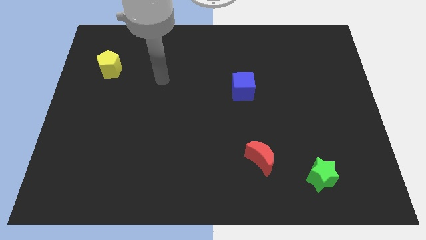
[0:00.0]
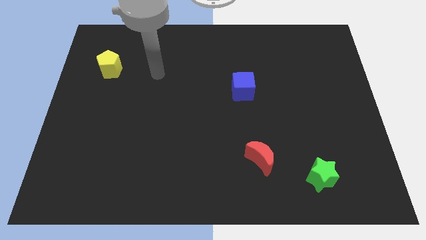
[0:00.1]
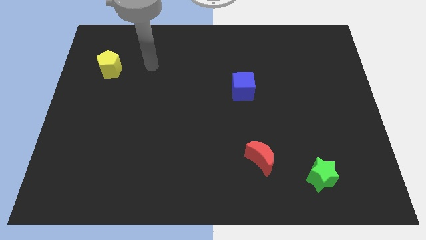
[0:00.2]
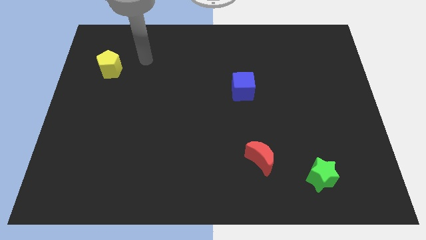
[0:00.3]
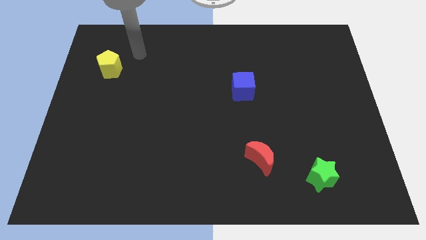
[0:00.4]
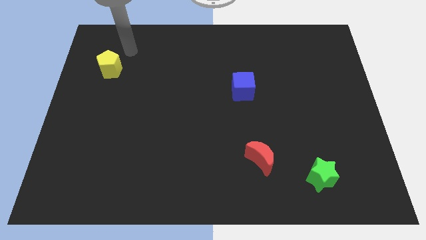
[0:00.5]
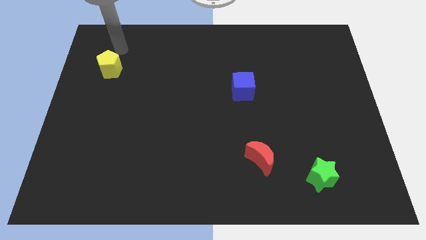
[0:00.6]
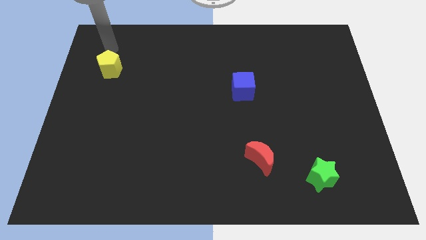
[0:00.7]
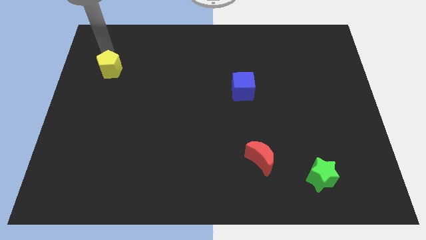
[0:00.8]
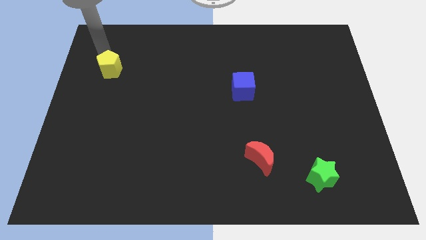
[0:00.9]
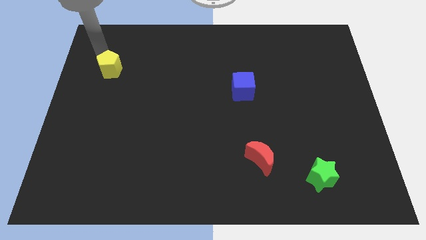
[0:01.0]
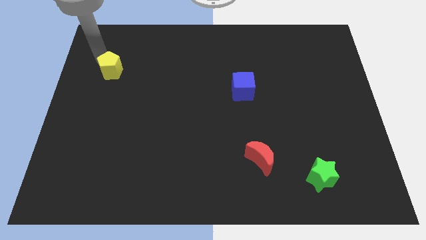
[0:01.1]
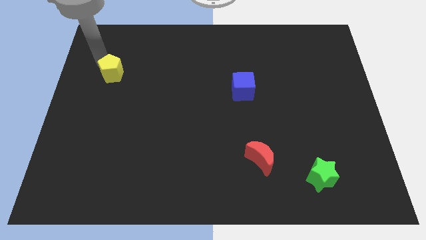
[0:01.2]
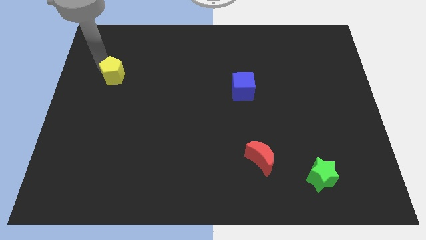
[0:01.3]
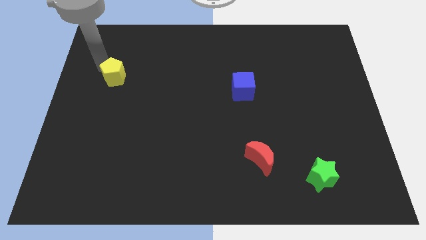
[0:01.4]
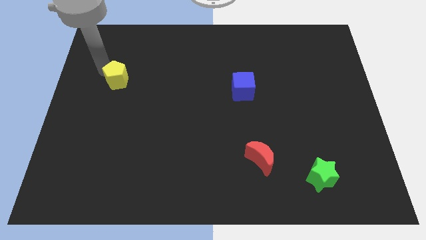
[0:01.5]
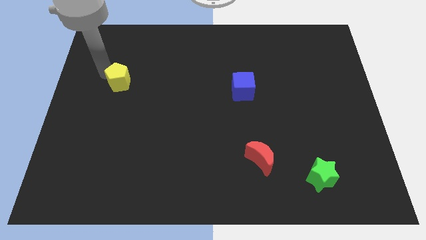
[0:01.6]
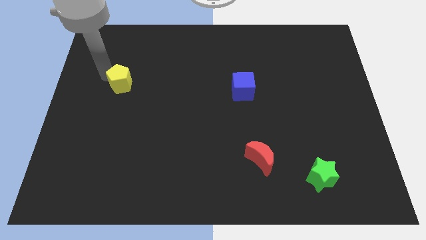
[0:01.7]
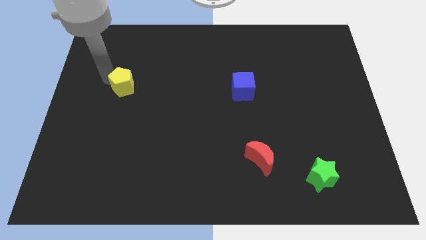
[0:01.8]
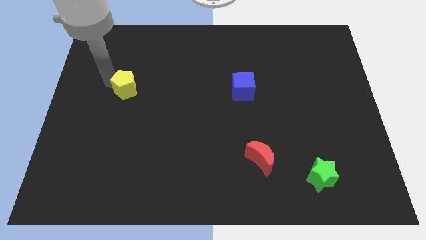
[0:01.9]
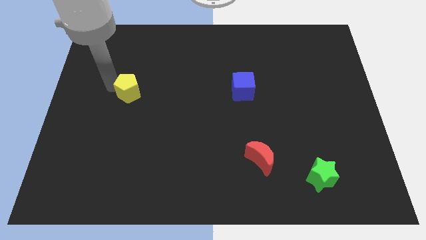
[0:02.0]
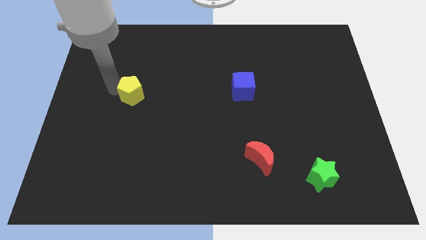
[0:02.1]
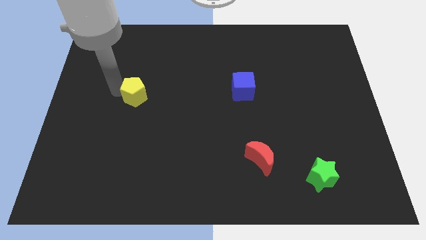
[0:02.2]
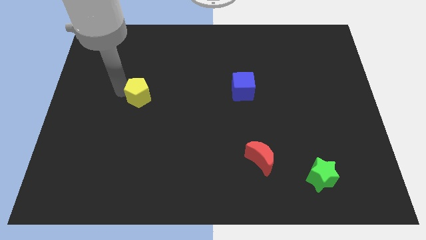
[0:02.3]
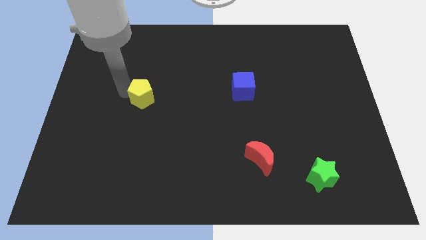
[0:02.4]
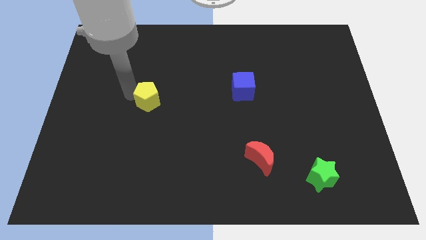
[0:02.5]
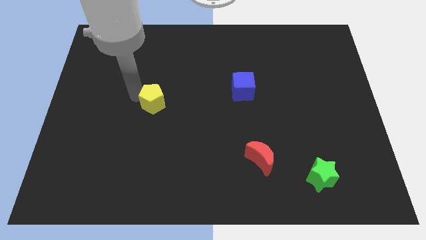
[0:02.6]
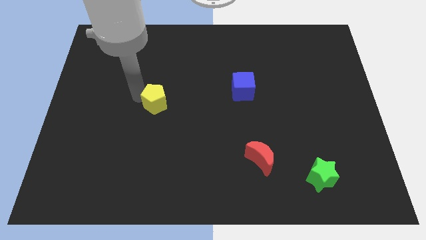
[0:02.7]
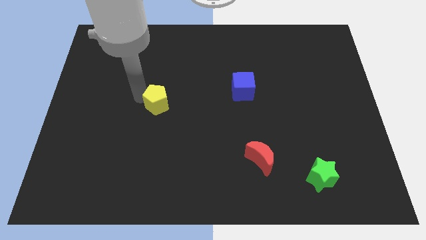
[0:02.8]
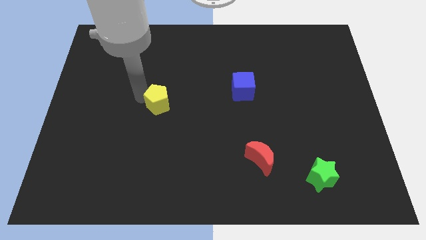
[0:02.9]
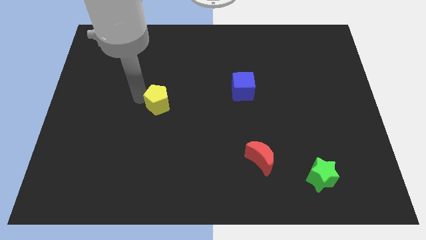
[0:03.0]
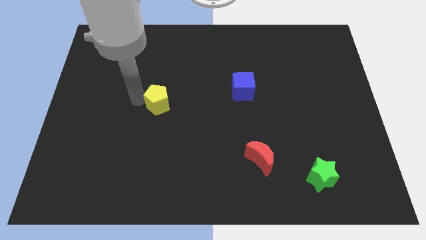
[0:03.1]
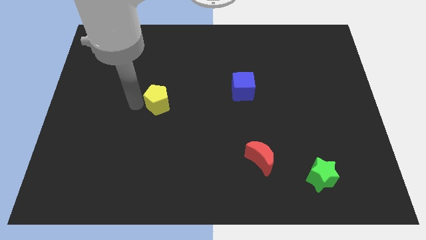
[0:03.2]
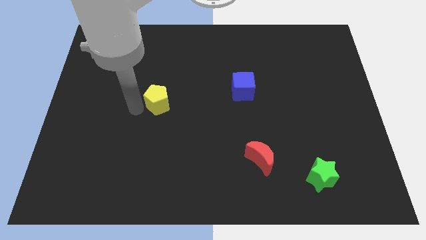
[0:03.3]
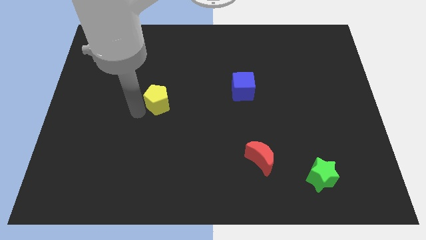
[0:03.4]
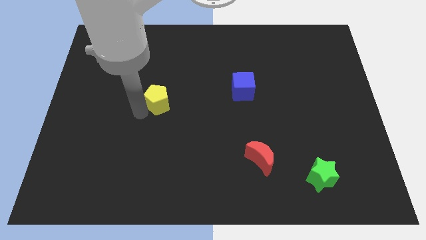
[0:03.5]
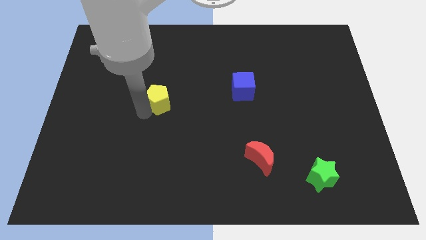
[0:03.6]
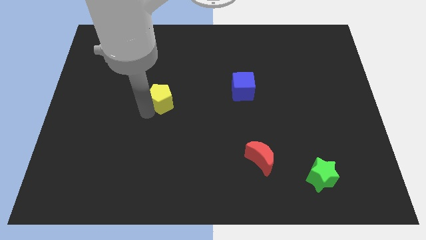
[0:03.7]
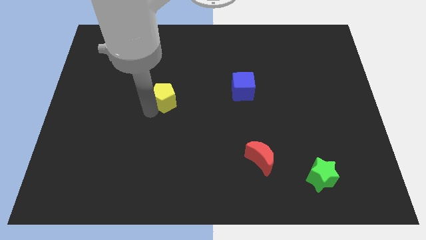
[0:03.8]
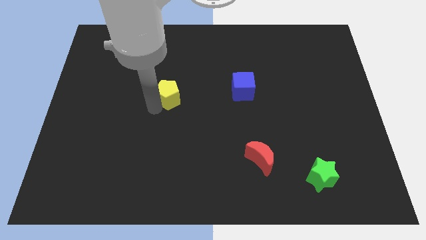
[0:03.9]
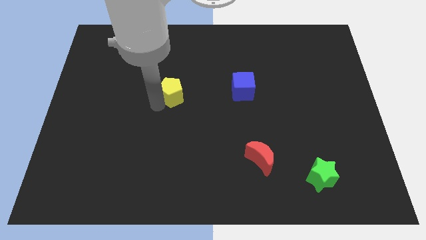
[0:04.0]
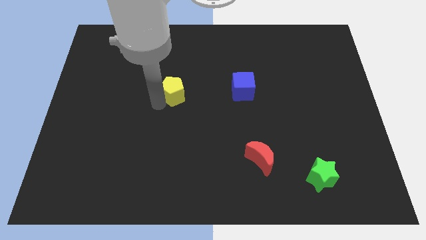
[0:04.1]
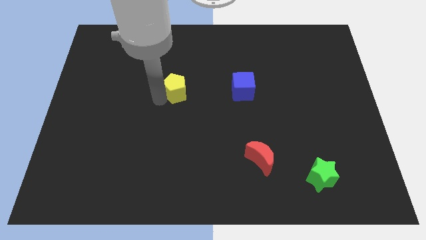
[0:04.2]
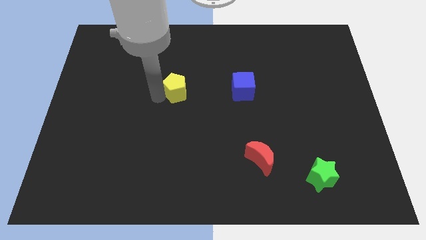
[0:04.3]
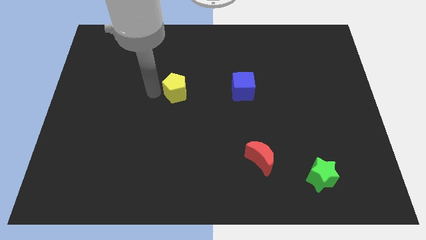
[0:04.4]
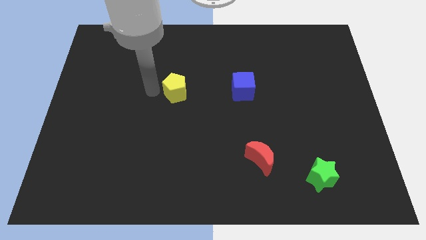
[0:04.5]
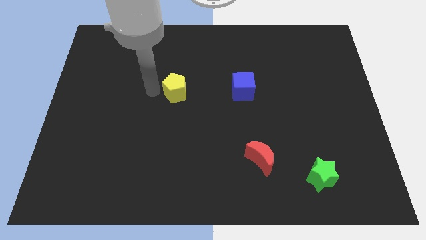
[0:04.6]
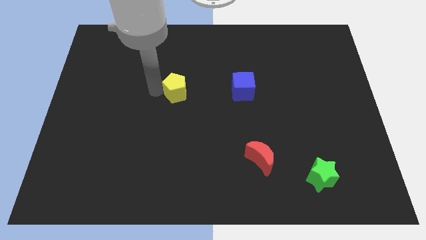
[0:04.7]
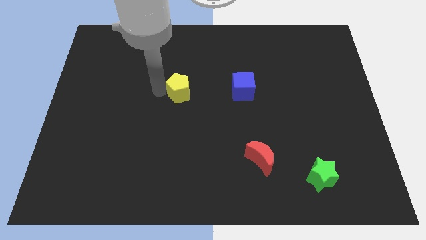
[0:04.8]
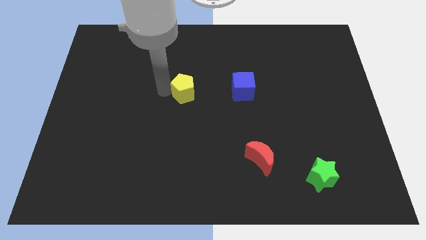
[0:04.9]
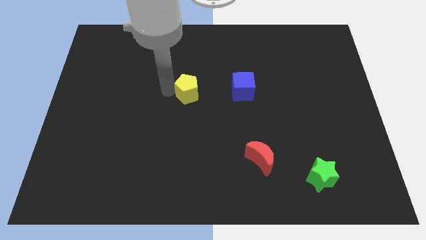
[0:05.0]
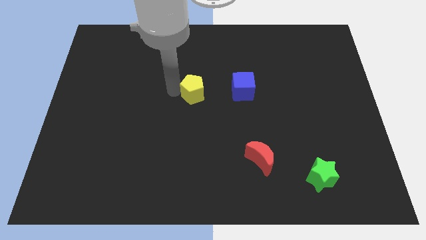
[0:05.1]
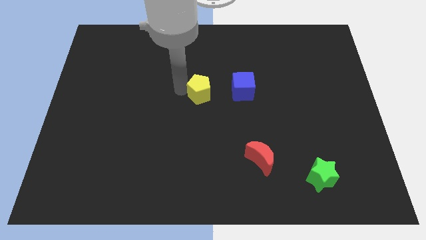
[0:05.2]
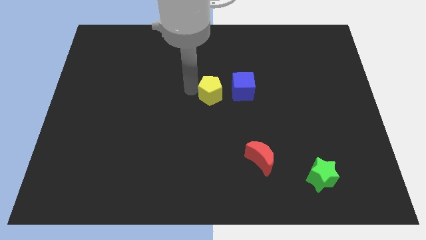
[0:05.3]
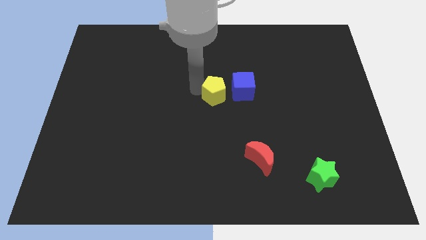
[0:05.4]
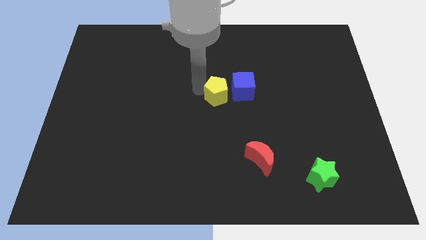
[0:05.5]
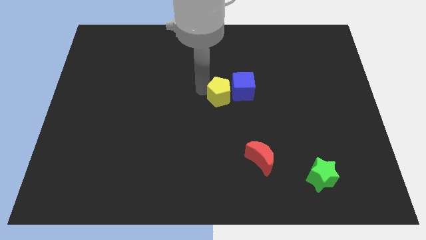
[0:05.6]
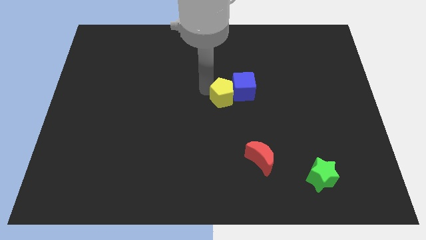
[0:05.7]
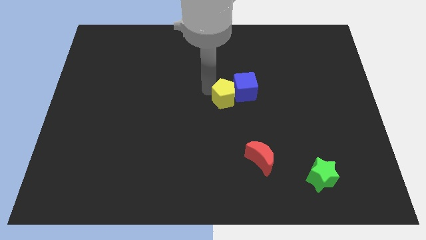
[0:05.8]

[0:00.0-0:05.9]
push the yellow pentagon close to the blue cube

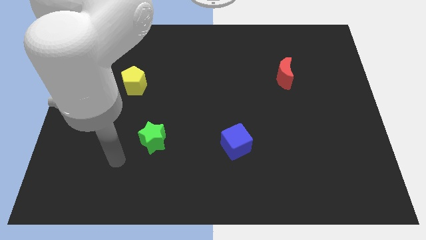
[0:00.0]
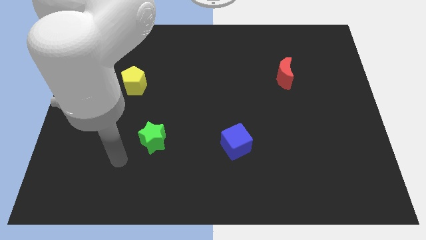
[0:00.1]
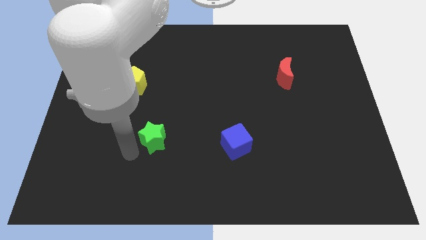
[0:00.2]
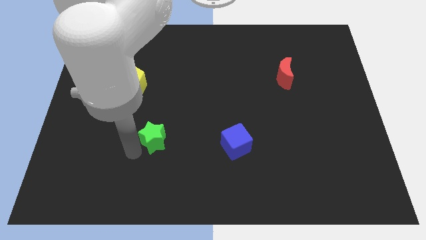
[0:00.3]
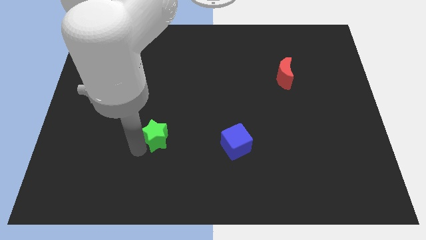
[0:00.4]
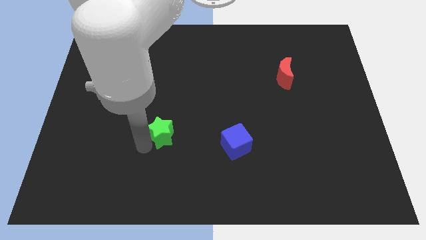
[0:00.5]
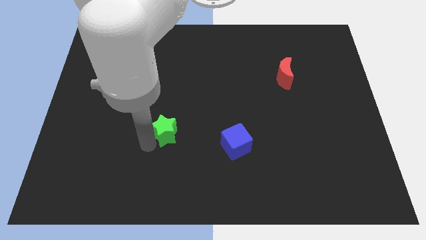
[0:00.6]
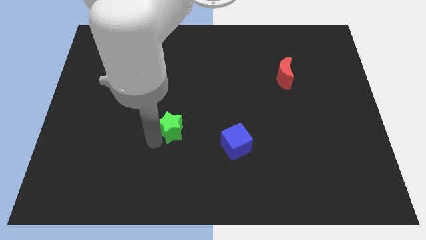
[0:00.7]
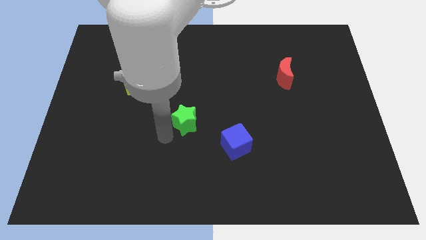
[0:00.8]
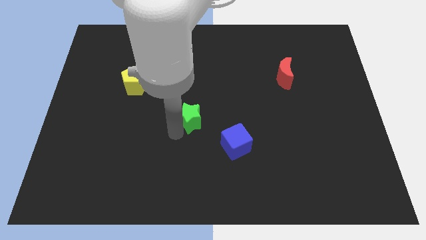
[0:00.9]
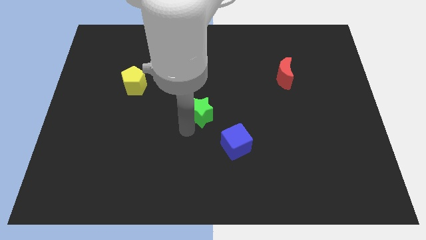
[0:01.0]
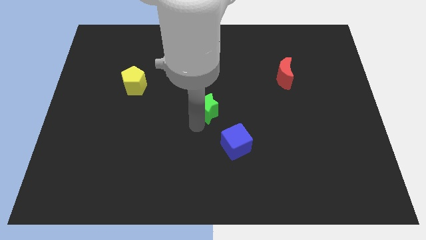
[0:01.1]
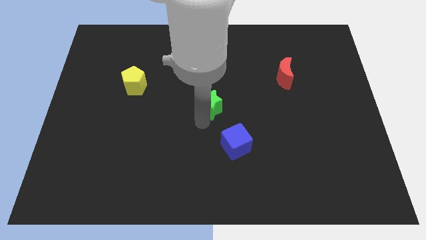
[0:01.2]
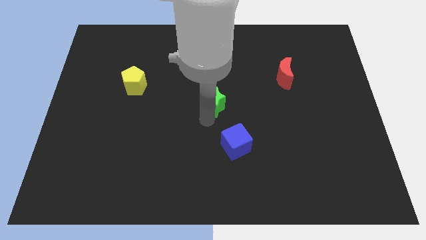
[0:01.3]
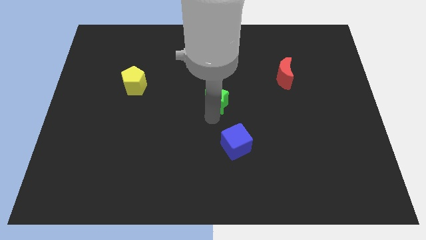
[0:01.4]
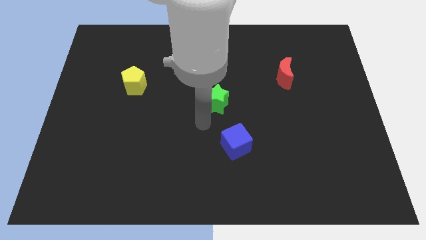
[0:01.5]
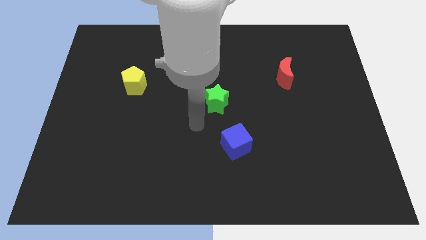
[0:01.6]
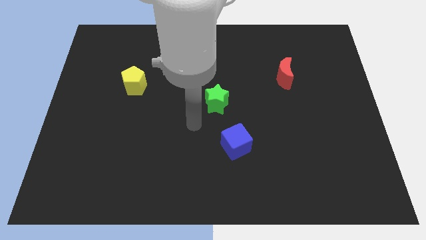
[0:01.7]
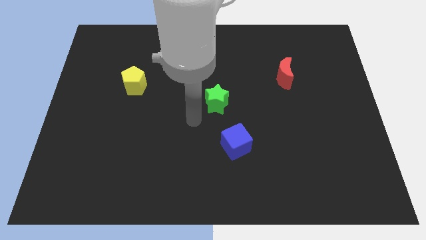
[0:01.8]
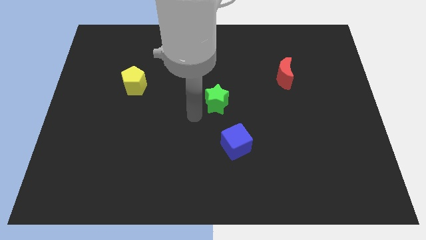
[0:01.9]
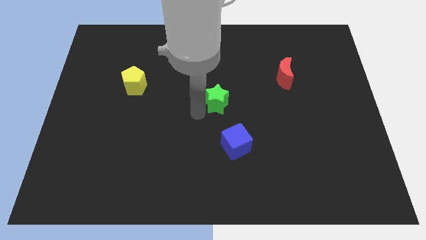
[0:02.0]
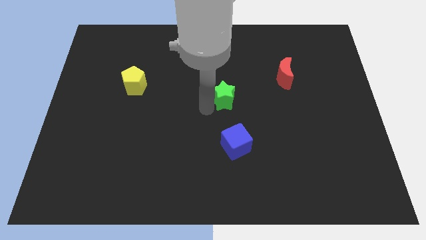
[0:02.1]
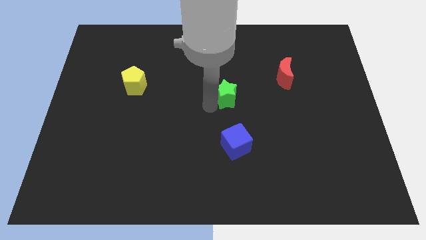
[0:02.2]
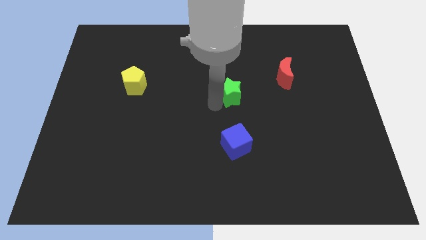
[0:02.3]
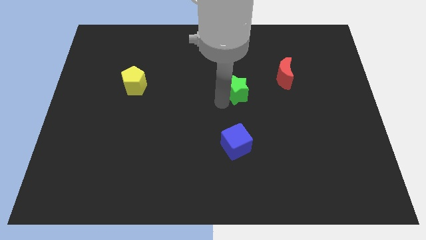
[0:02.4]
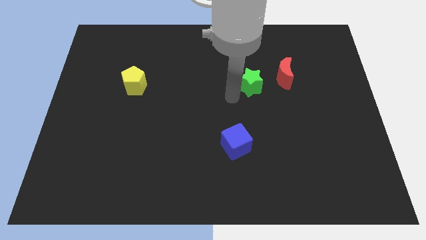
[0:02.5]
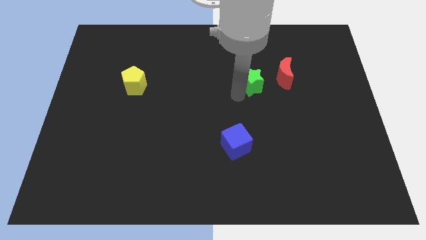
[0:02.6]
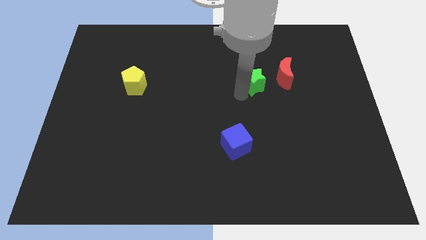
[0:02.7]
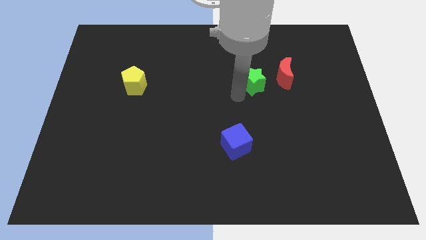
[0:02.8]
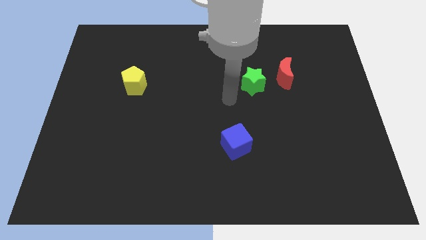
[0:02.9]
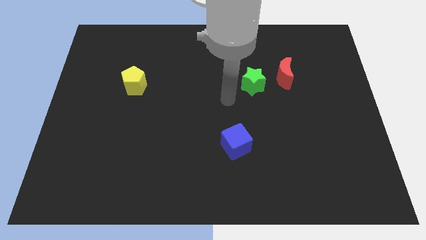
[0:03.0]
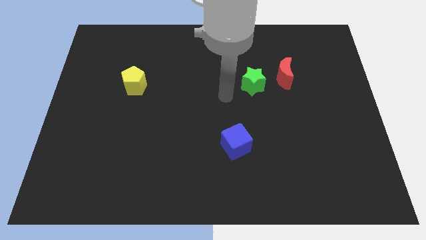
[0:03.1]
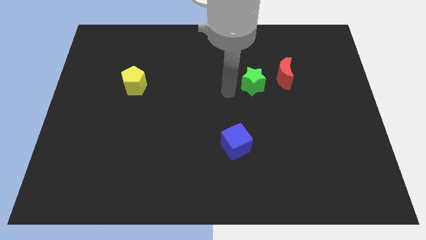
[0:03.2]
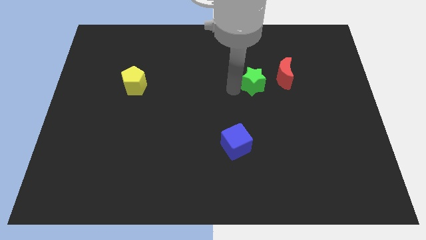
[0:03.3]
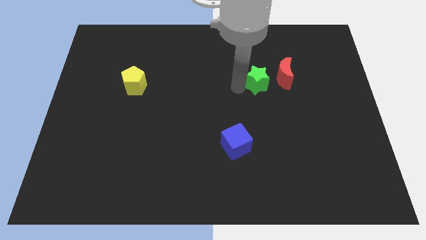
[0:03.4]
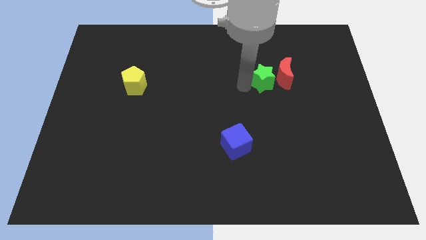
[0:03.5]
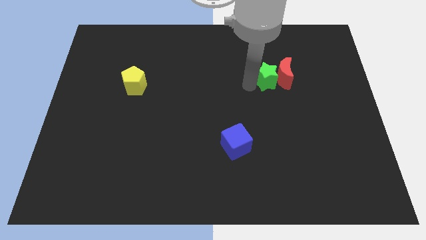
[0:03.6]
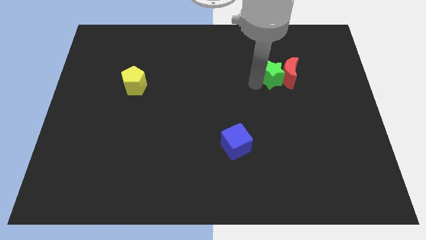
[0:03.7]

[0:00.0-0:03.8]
move the green block towards the red moon
